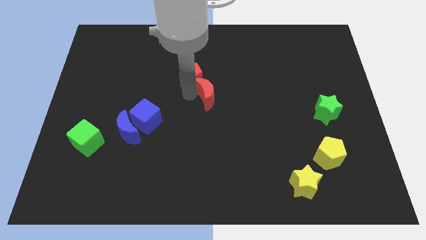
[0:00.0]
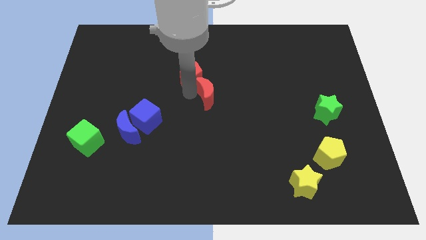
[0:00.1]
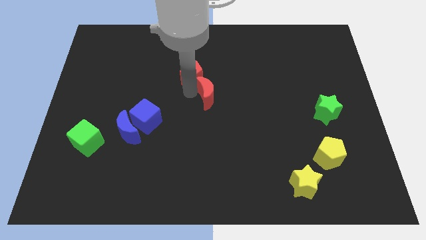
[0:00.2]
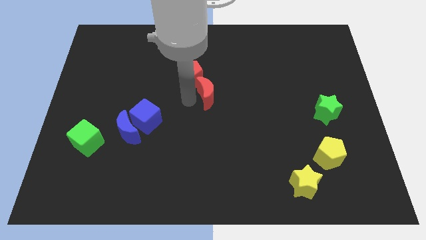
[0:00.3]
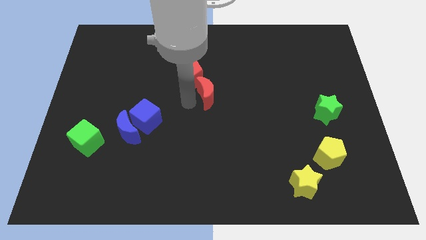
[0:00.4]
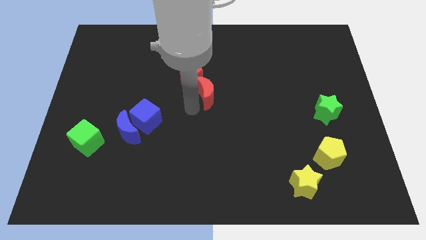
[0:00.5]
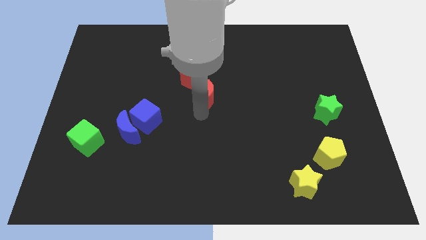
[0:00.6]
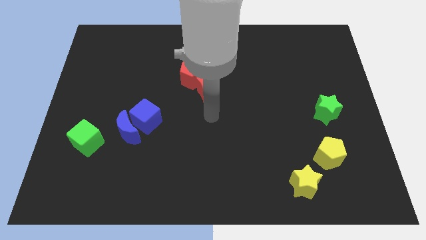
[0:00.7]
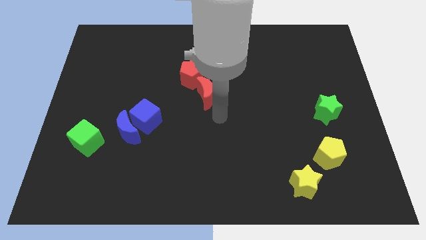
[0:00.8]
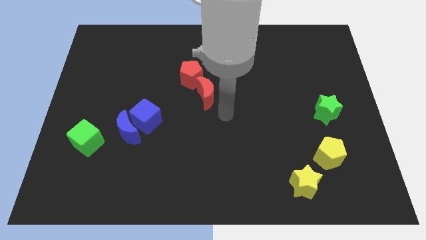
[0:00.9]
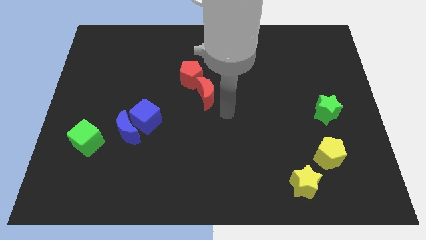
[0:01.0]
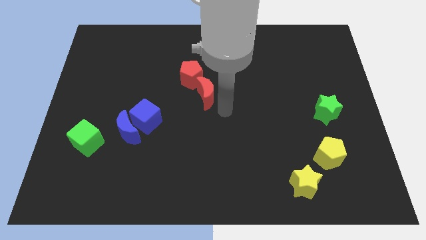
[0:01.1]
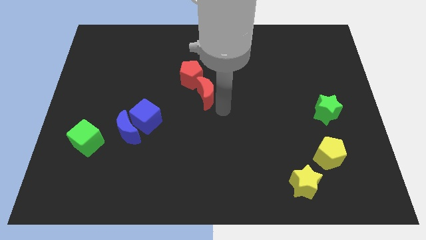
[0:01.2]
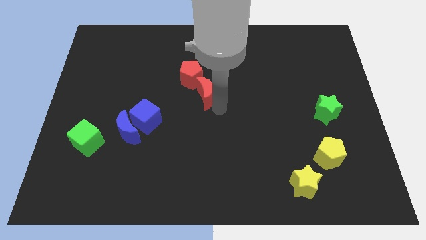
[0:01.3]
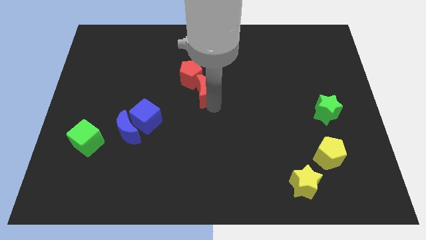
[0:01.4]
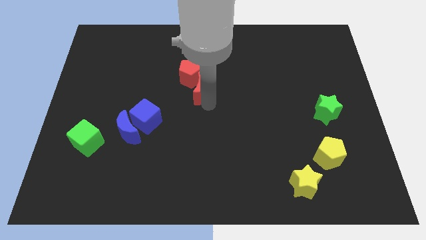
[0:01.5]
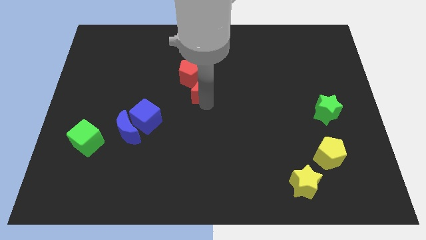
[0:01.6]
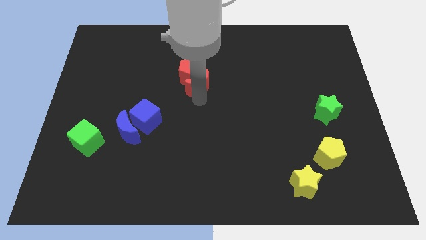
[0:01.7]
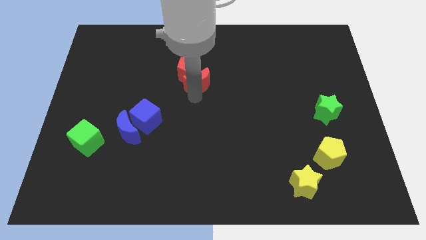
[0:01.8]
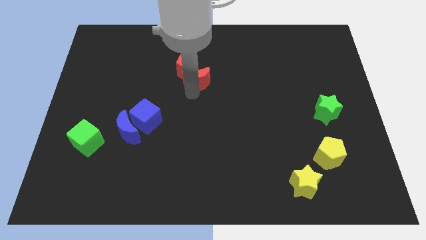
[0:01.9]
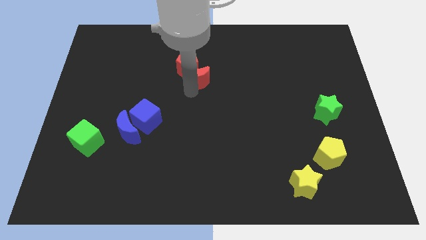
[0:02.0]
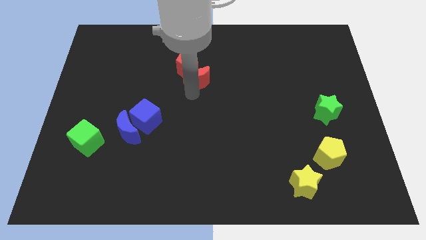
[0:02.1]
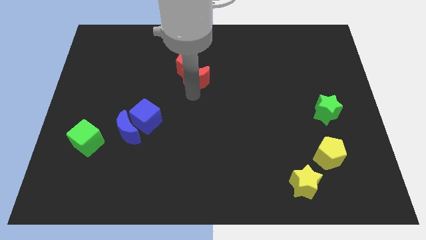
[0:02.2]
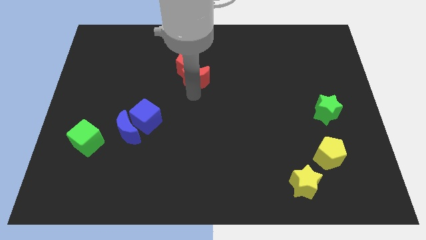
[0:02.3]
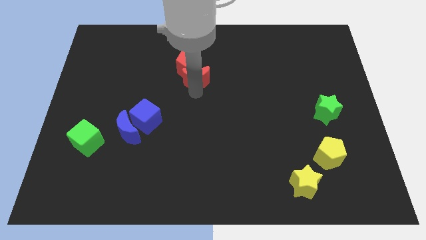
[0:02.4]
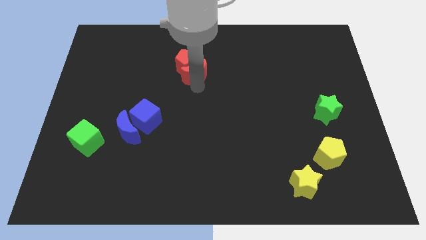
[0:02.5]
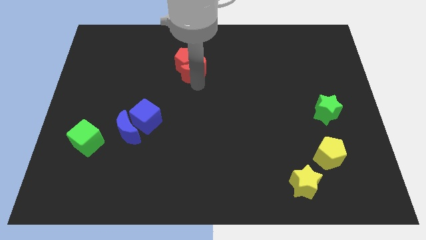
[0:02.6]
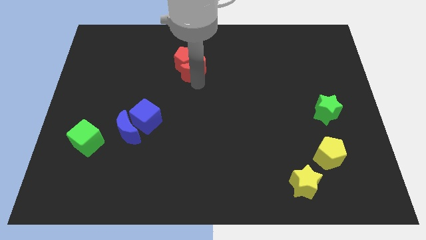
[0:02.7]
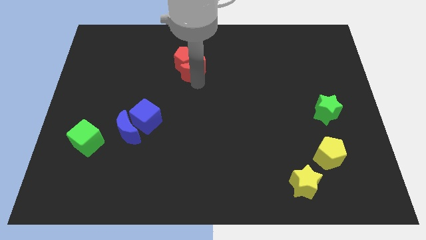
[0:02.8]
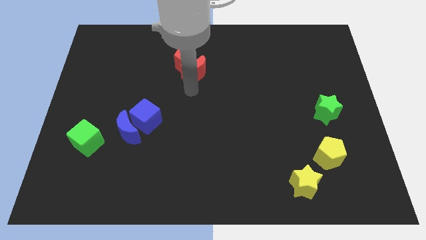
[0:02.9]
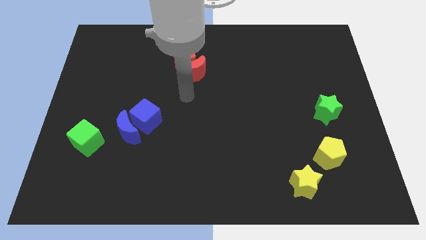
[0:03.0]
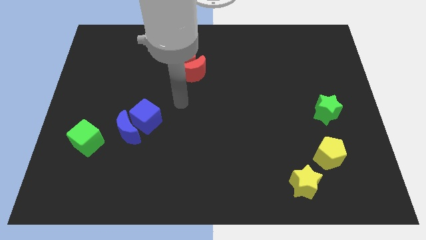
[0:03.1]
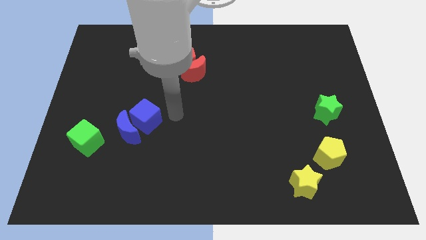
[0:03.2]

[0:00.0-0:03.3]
move red blocks to top

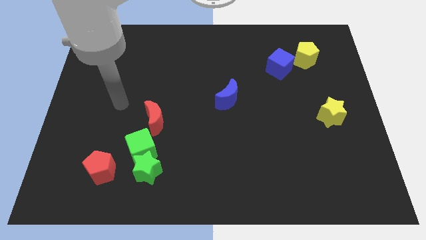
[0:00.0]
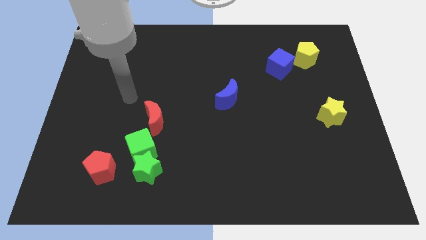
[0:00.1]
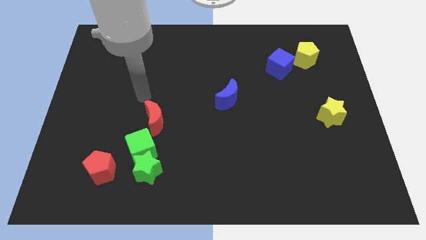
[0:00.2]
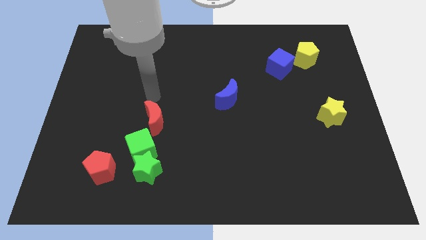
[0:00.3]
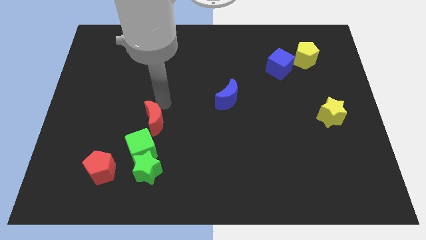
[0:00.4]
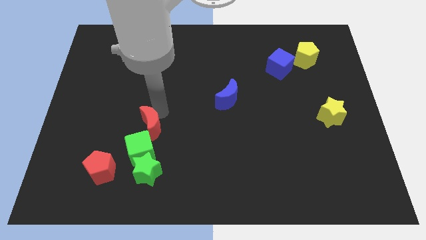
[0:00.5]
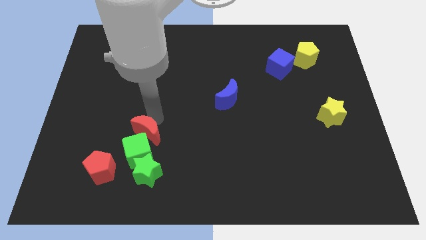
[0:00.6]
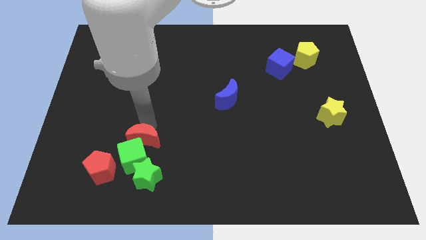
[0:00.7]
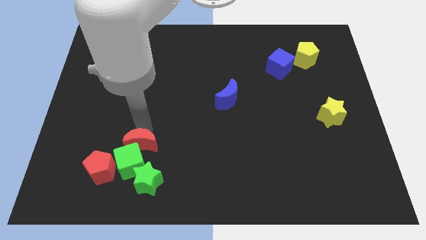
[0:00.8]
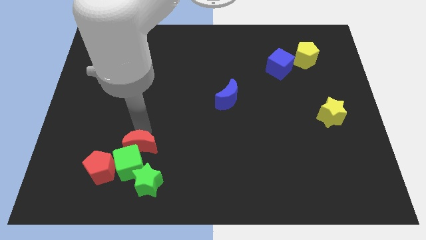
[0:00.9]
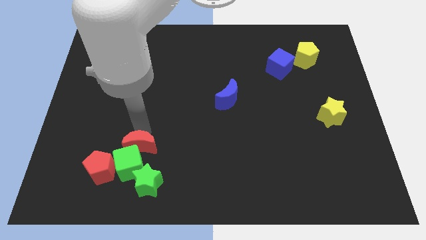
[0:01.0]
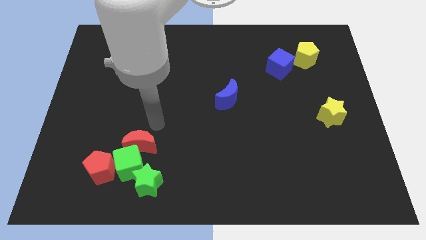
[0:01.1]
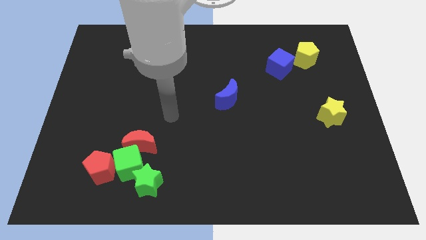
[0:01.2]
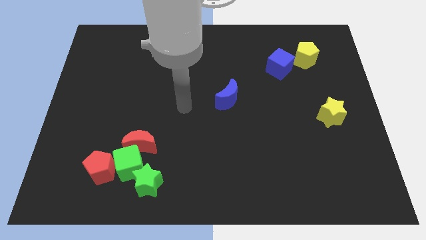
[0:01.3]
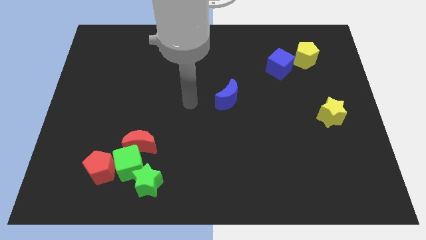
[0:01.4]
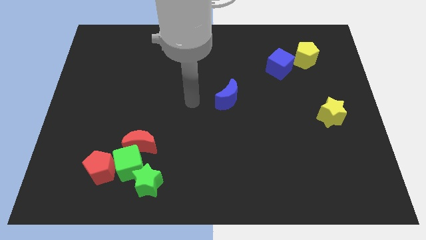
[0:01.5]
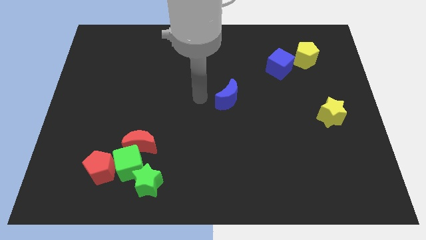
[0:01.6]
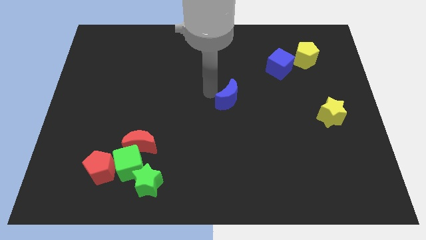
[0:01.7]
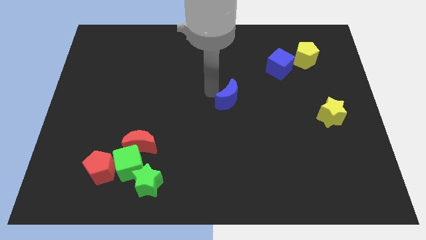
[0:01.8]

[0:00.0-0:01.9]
point your arm above blue cube

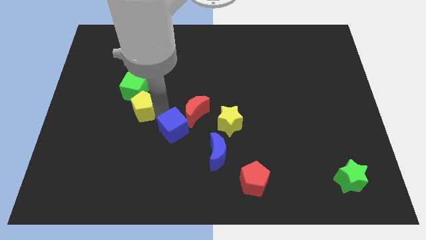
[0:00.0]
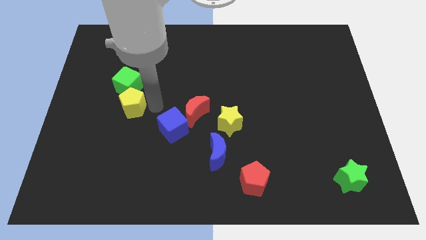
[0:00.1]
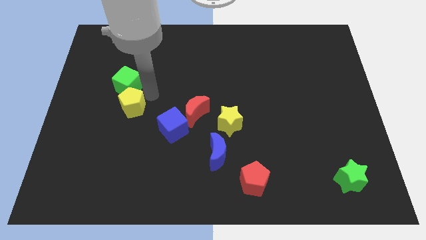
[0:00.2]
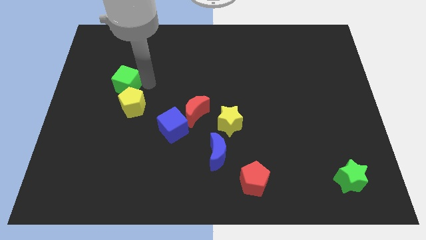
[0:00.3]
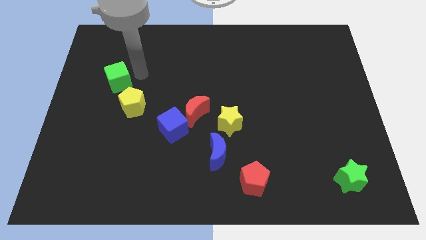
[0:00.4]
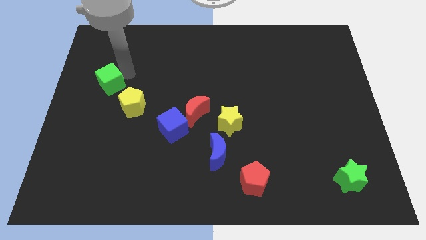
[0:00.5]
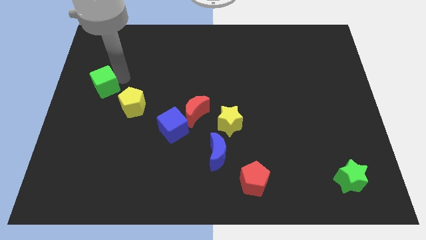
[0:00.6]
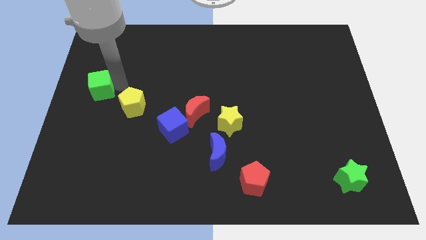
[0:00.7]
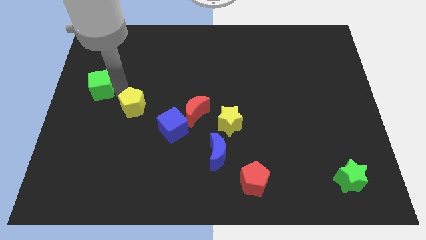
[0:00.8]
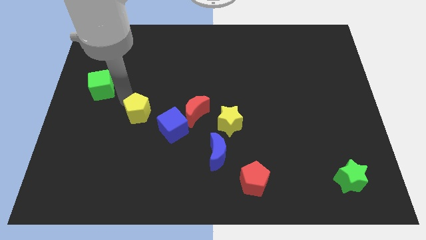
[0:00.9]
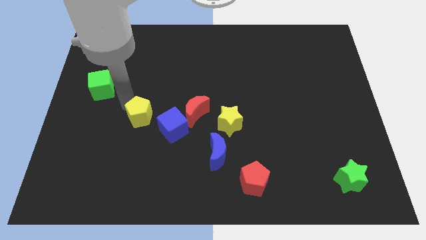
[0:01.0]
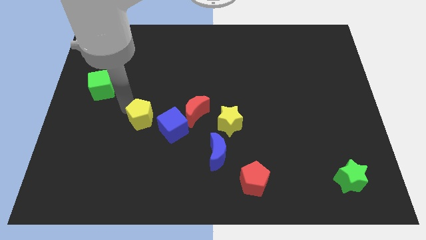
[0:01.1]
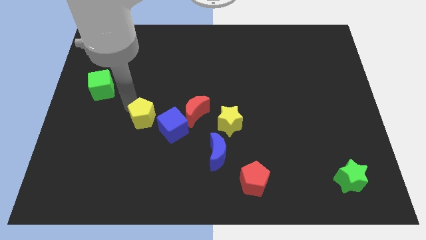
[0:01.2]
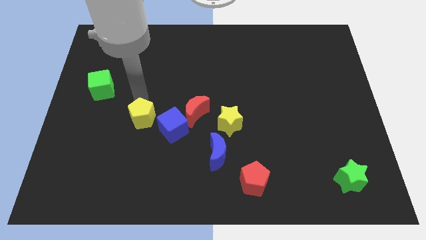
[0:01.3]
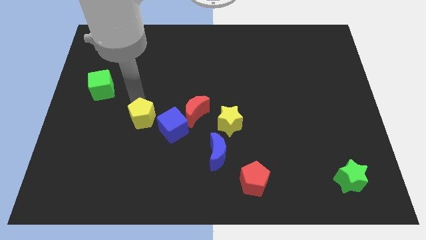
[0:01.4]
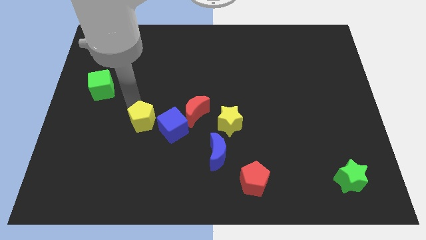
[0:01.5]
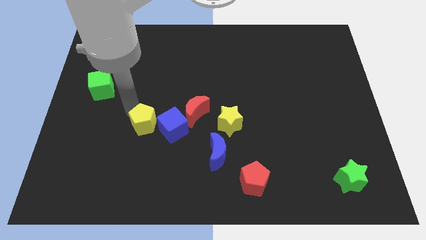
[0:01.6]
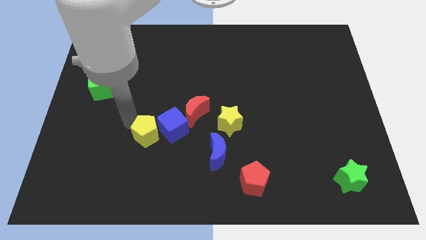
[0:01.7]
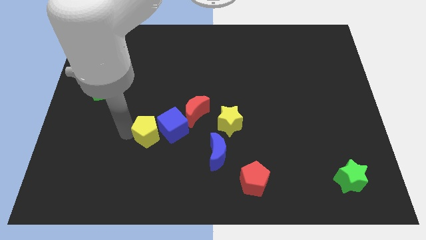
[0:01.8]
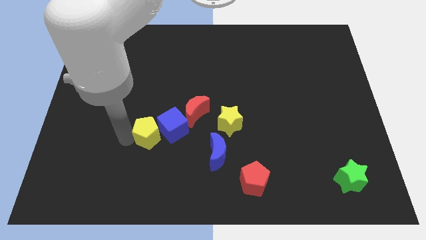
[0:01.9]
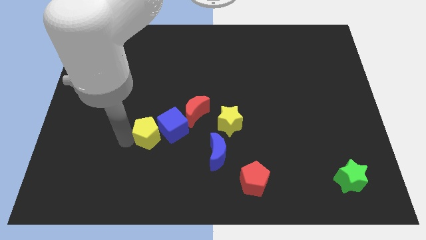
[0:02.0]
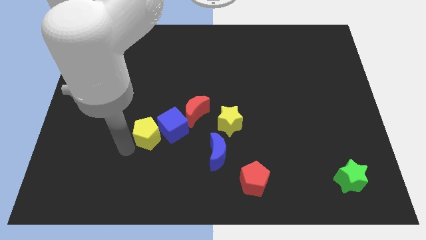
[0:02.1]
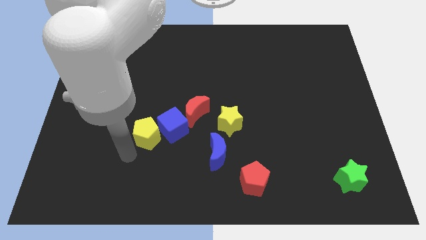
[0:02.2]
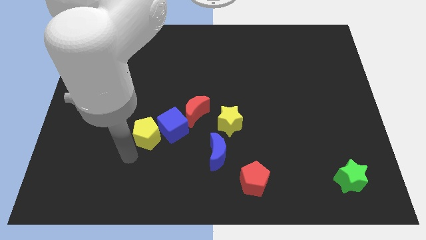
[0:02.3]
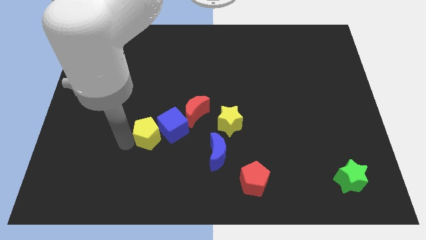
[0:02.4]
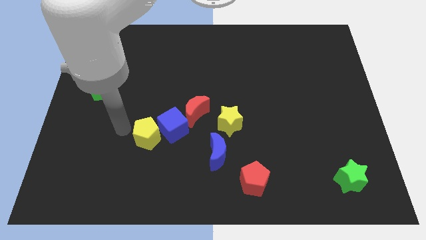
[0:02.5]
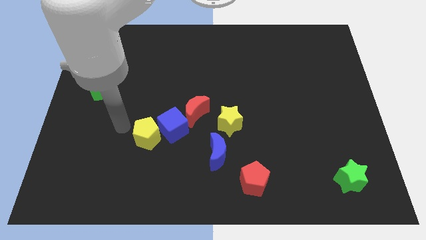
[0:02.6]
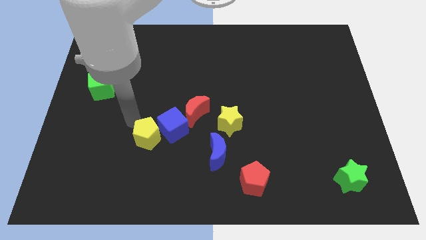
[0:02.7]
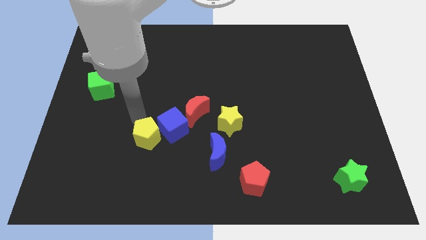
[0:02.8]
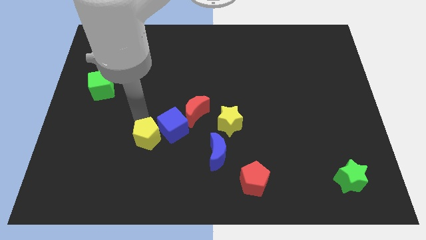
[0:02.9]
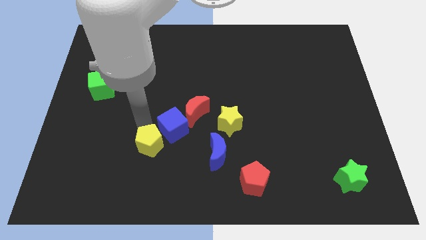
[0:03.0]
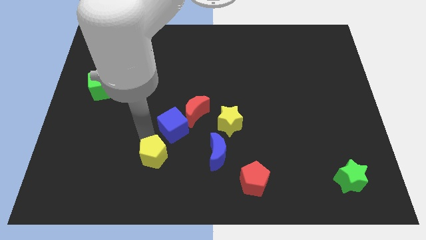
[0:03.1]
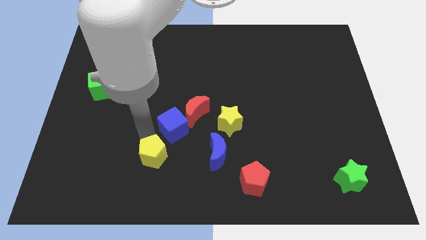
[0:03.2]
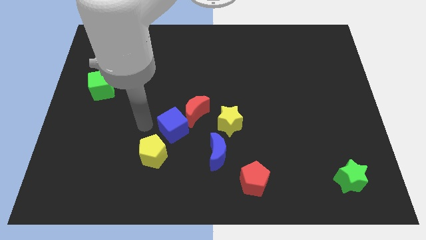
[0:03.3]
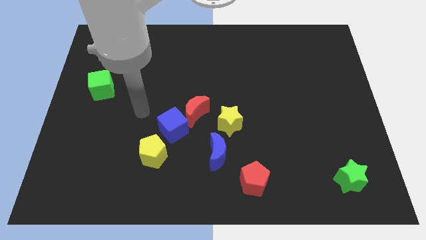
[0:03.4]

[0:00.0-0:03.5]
drag the yellow pentagon slightly downwards

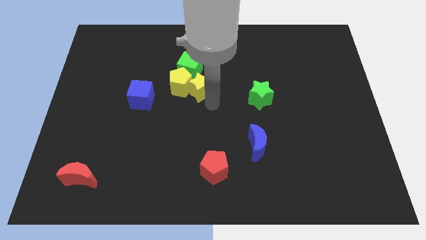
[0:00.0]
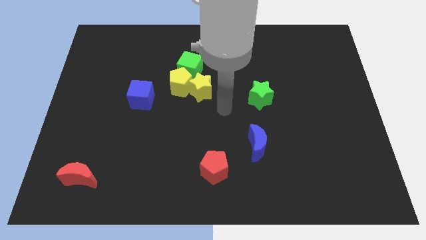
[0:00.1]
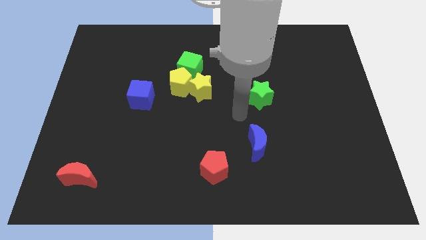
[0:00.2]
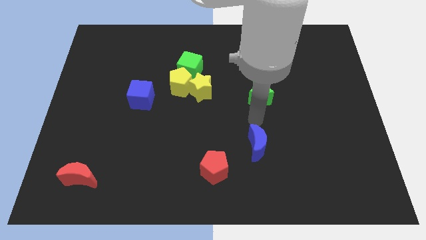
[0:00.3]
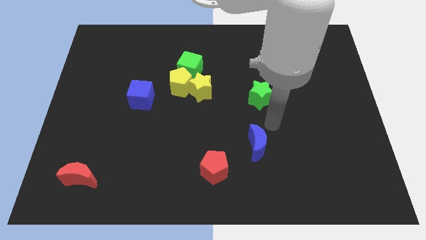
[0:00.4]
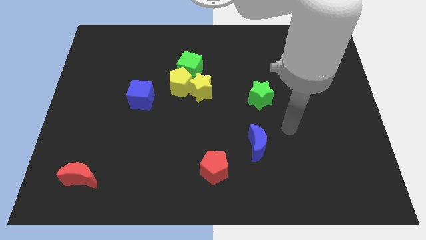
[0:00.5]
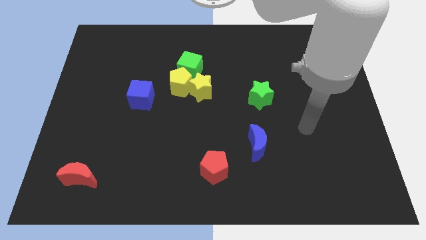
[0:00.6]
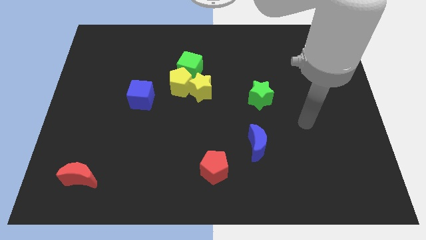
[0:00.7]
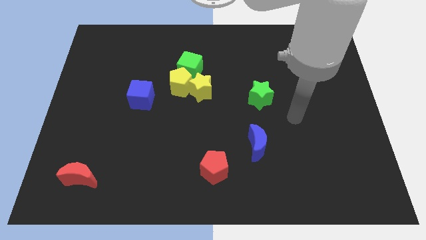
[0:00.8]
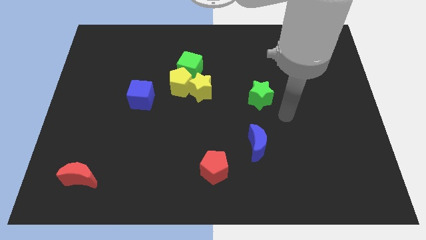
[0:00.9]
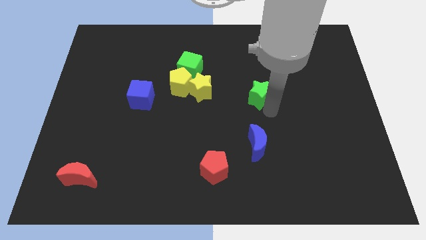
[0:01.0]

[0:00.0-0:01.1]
move your arm away from yellow star
